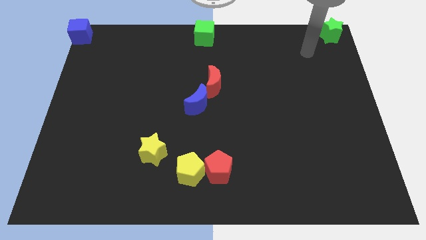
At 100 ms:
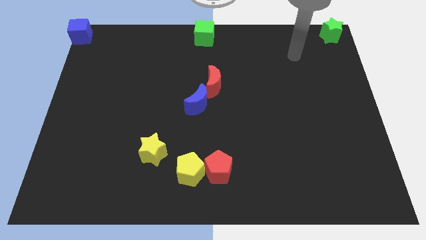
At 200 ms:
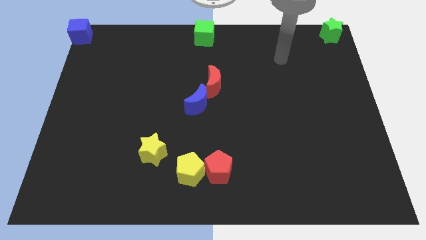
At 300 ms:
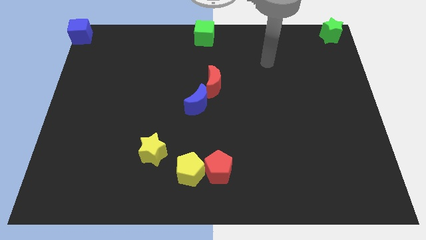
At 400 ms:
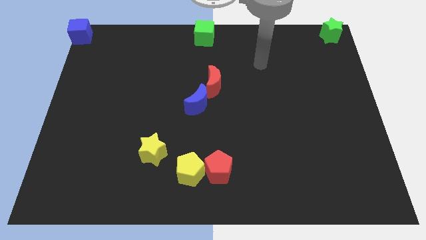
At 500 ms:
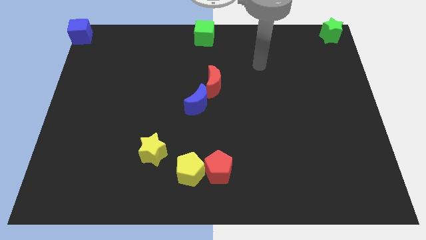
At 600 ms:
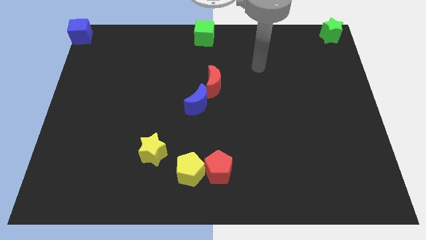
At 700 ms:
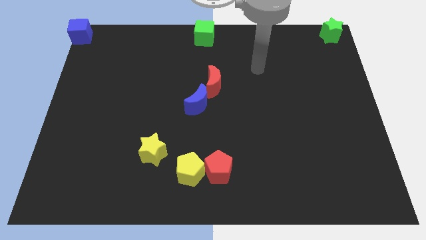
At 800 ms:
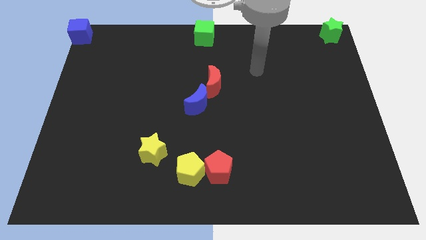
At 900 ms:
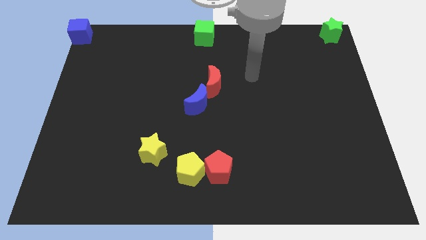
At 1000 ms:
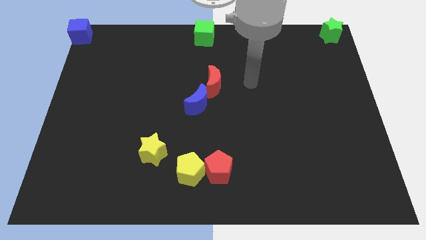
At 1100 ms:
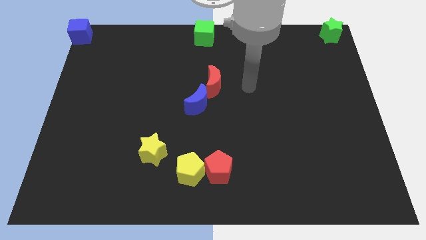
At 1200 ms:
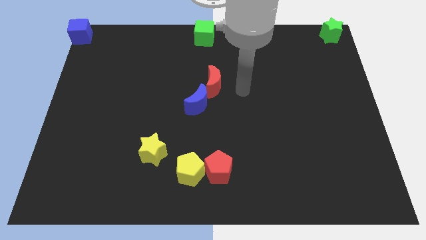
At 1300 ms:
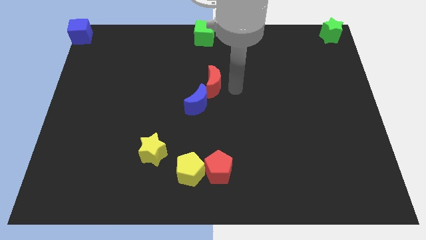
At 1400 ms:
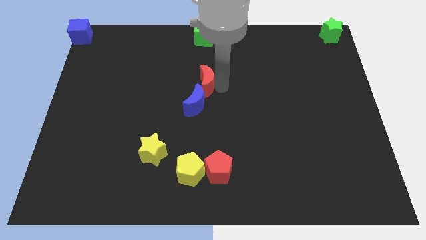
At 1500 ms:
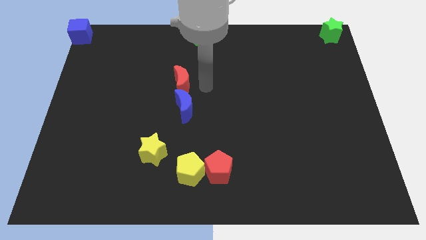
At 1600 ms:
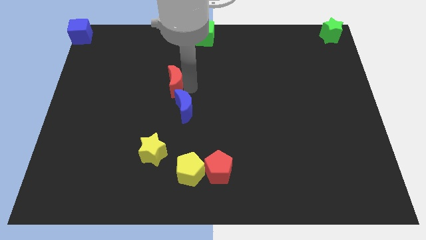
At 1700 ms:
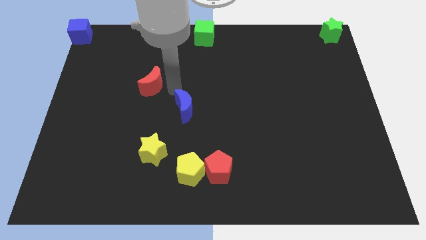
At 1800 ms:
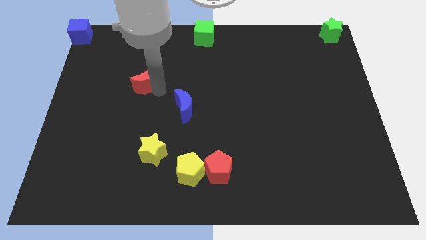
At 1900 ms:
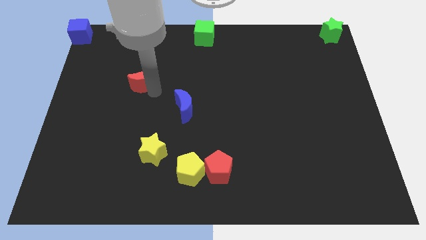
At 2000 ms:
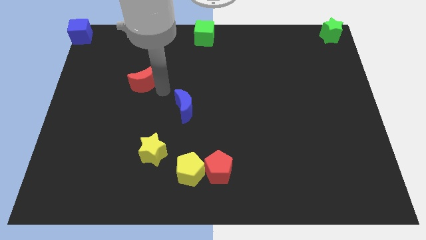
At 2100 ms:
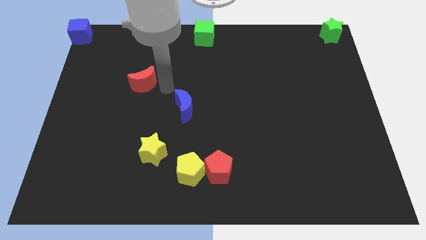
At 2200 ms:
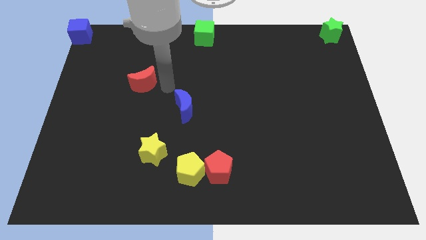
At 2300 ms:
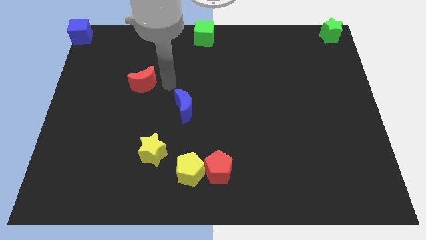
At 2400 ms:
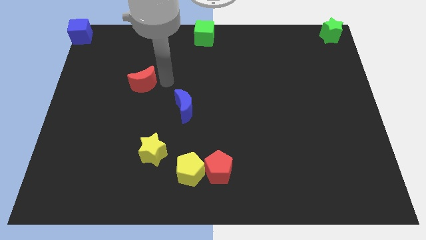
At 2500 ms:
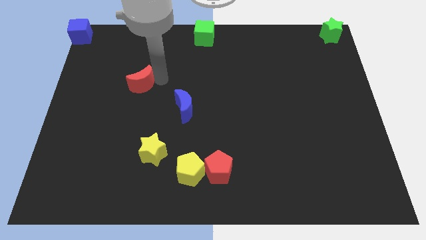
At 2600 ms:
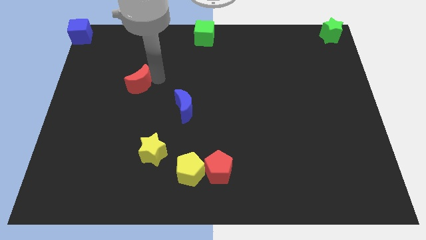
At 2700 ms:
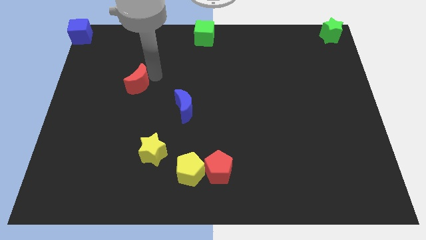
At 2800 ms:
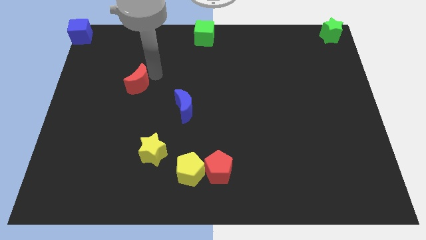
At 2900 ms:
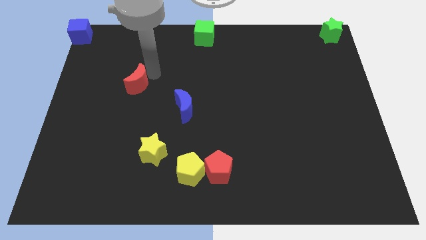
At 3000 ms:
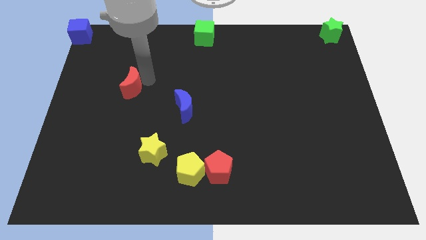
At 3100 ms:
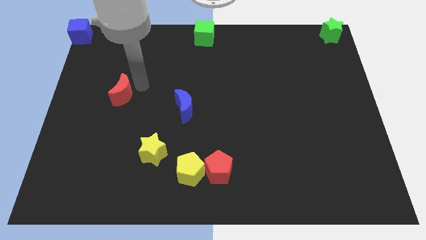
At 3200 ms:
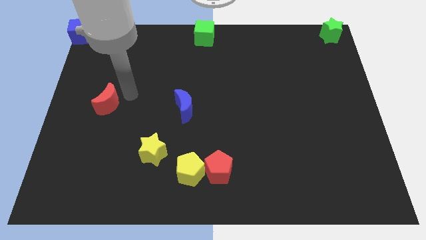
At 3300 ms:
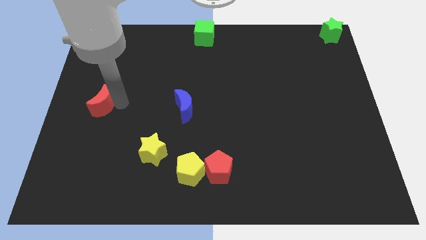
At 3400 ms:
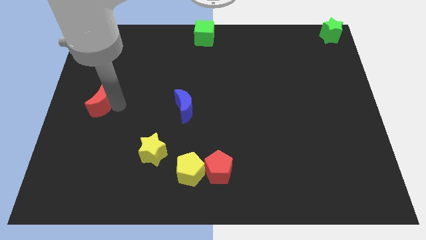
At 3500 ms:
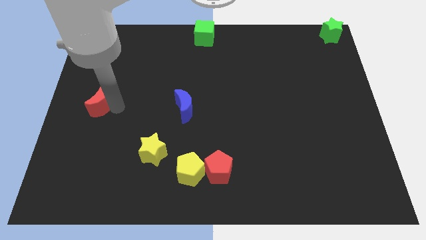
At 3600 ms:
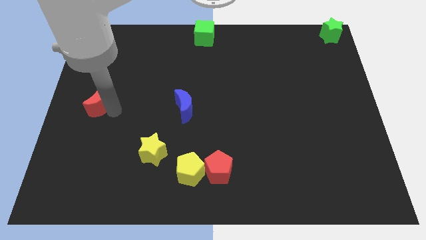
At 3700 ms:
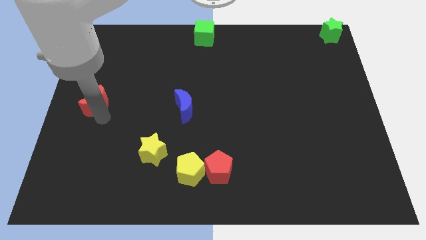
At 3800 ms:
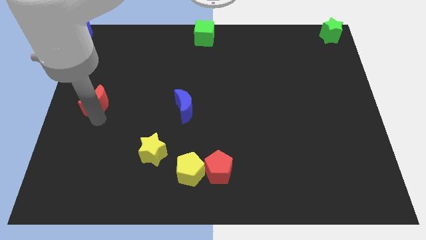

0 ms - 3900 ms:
move red crescent to the parallel left of the blue crescent

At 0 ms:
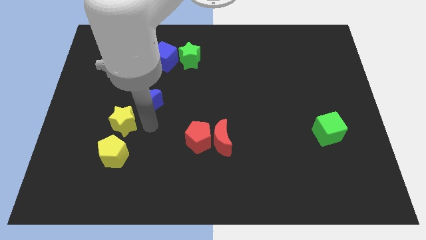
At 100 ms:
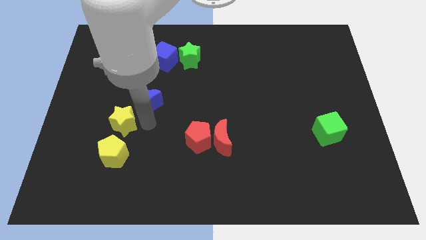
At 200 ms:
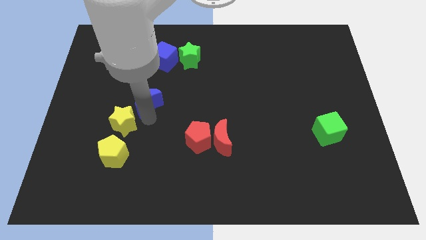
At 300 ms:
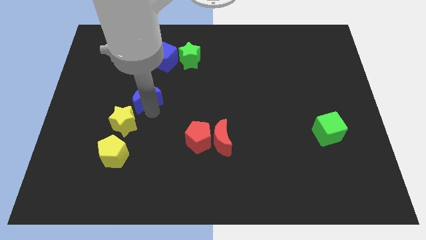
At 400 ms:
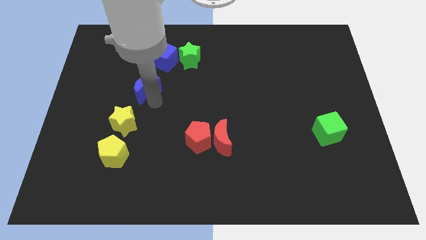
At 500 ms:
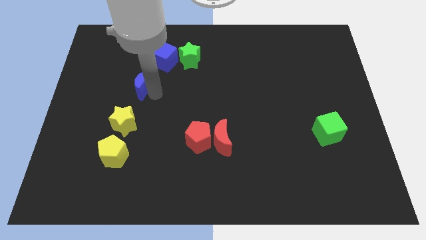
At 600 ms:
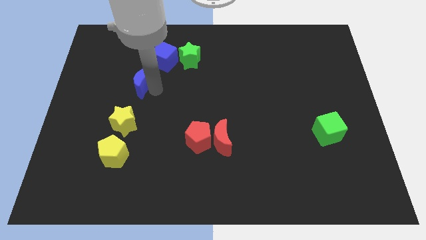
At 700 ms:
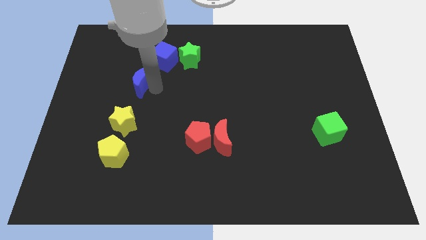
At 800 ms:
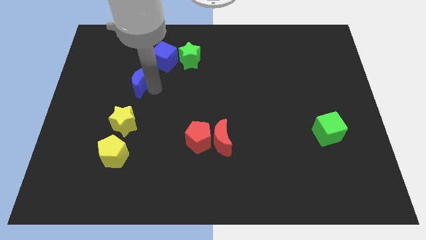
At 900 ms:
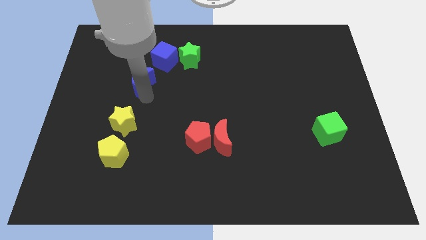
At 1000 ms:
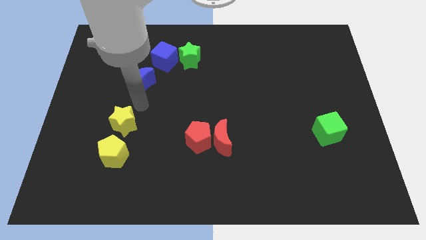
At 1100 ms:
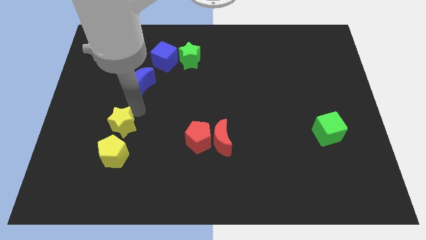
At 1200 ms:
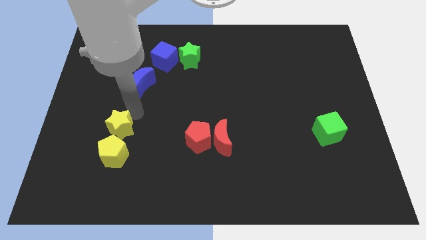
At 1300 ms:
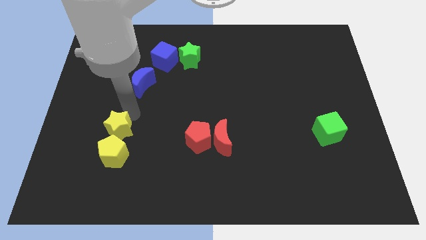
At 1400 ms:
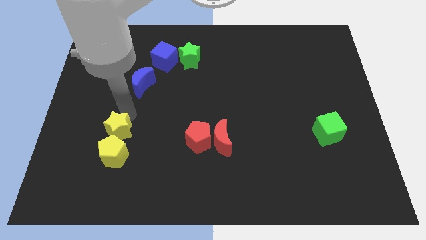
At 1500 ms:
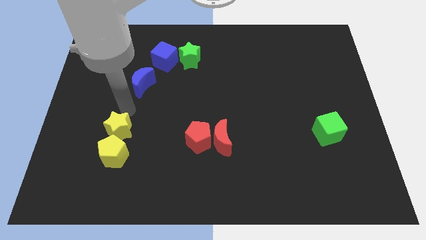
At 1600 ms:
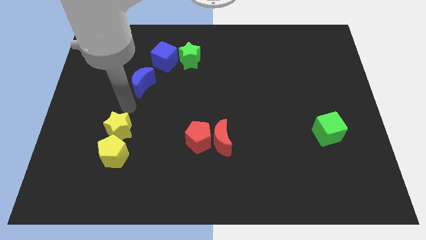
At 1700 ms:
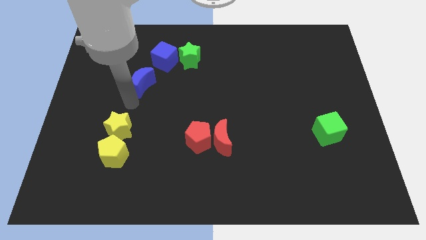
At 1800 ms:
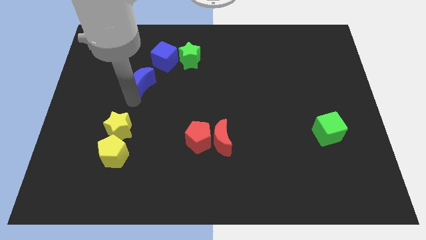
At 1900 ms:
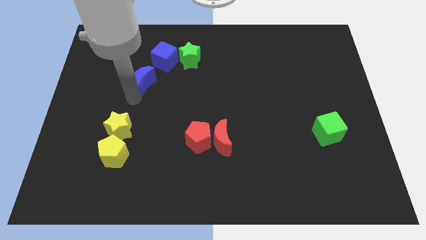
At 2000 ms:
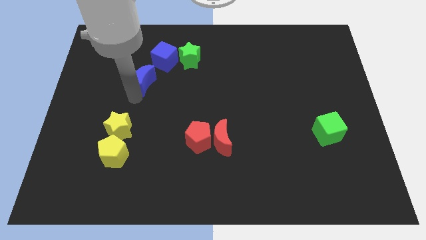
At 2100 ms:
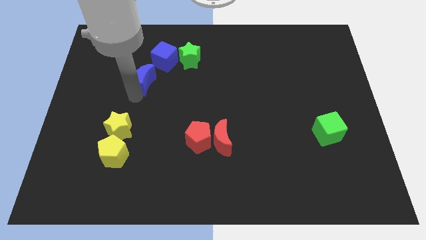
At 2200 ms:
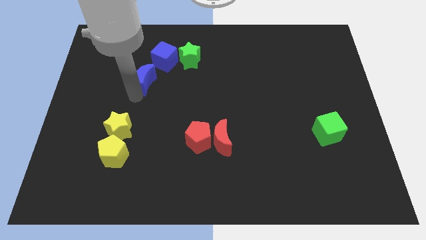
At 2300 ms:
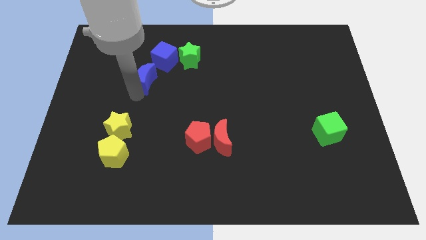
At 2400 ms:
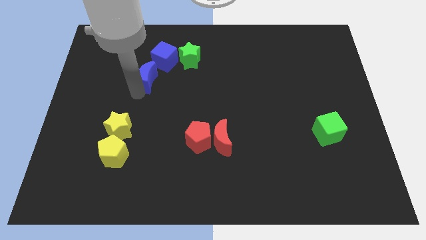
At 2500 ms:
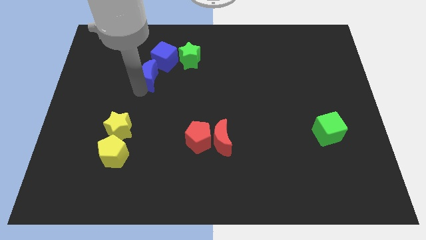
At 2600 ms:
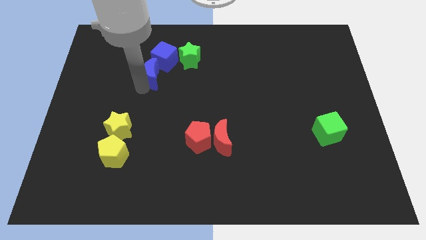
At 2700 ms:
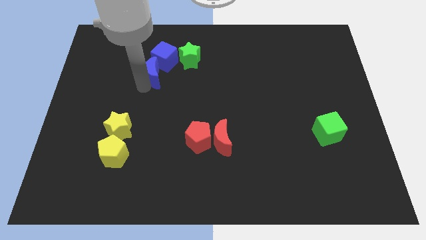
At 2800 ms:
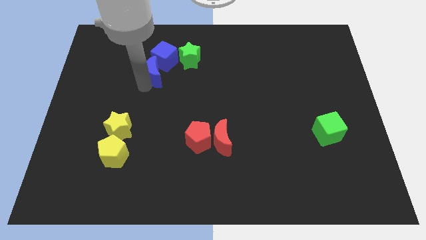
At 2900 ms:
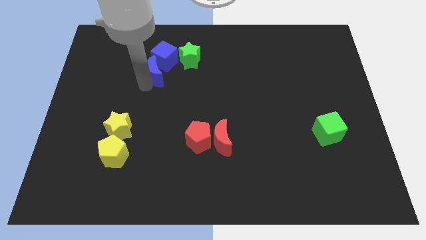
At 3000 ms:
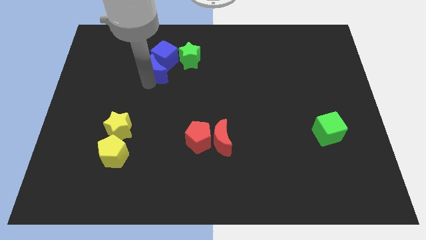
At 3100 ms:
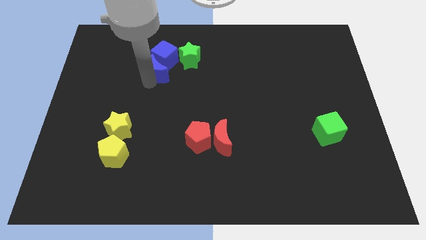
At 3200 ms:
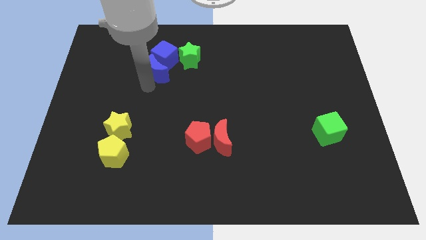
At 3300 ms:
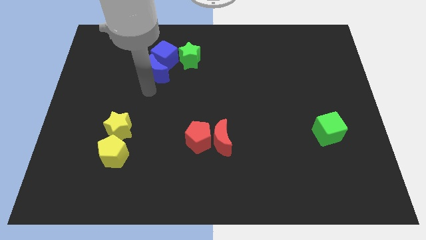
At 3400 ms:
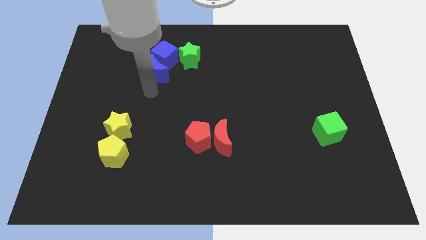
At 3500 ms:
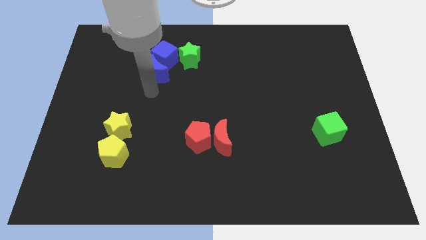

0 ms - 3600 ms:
move blue moon into blue cube

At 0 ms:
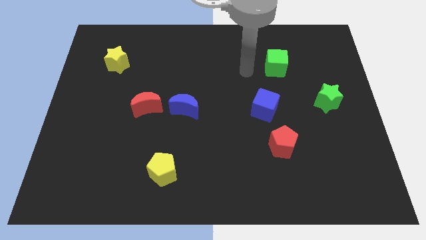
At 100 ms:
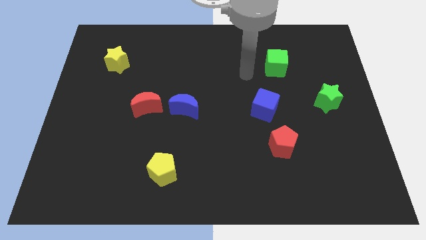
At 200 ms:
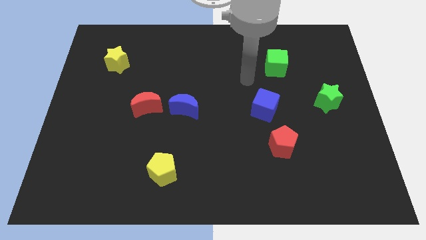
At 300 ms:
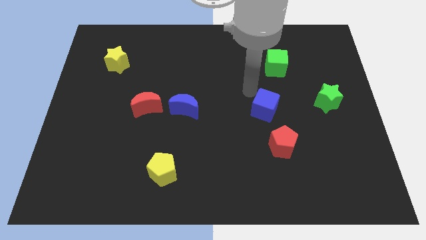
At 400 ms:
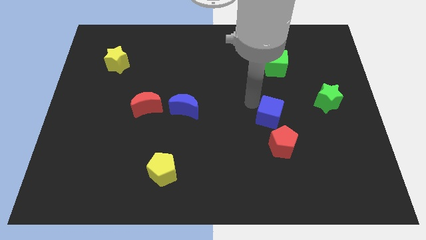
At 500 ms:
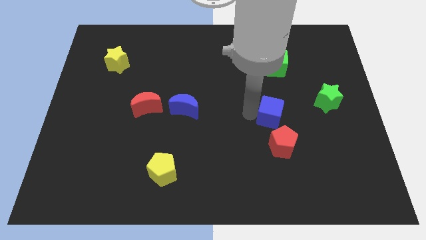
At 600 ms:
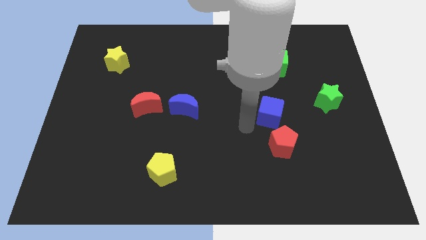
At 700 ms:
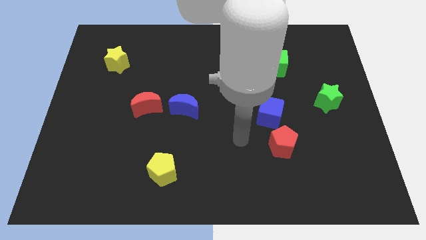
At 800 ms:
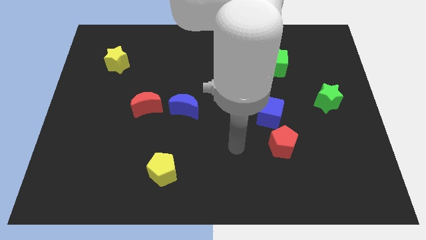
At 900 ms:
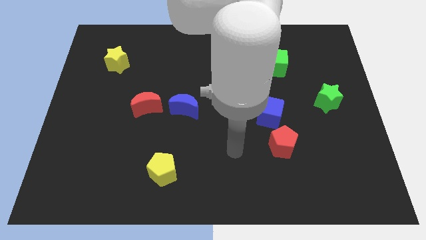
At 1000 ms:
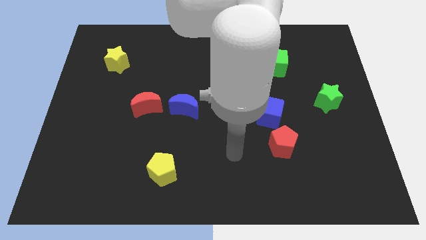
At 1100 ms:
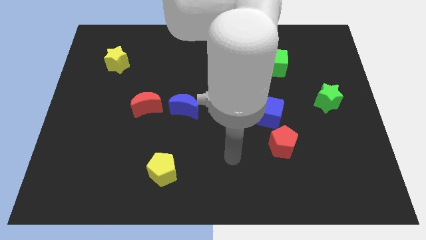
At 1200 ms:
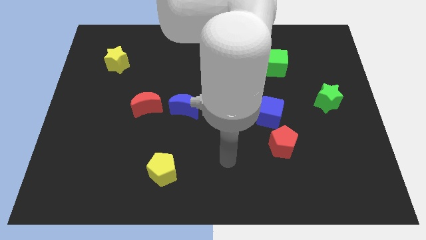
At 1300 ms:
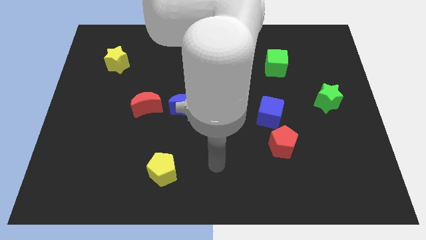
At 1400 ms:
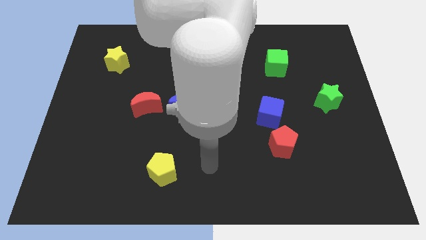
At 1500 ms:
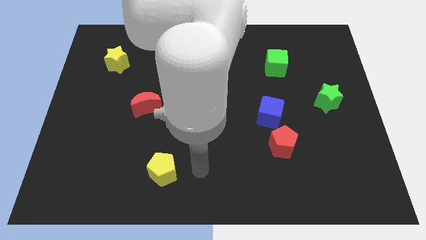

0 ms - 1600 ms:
move the blue cube slightly downwards
